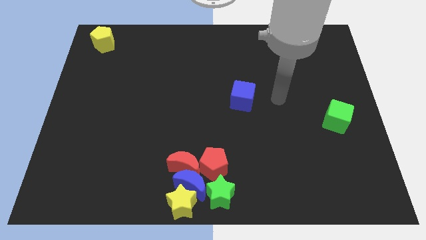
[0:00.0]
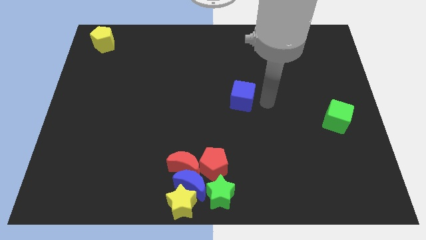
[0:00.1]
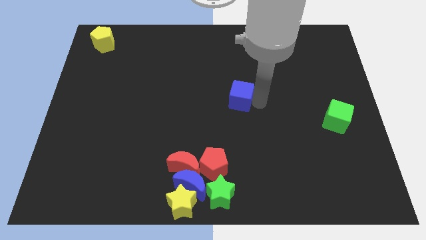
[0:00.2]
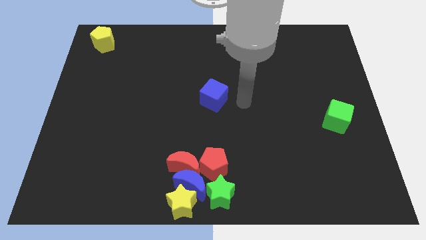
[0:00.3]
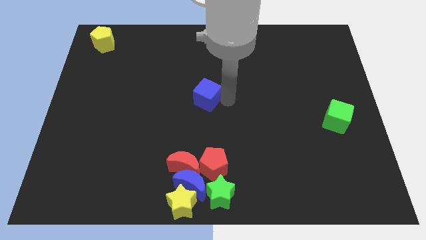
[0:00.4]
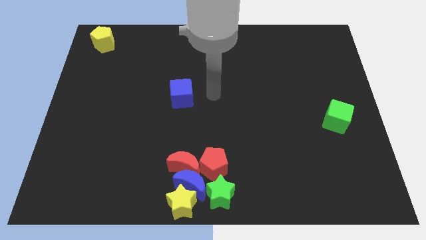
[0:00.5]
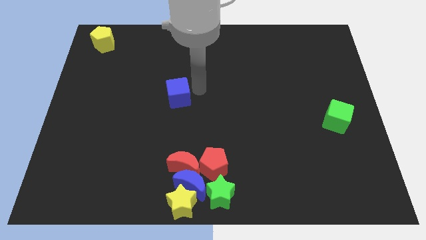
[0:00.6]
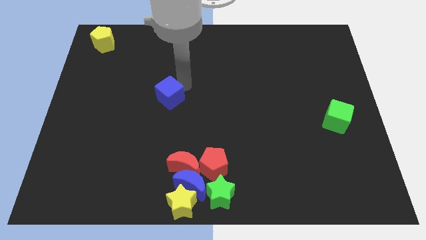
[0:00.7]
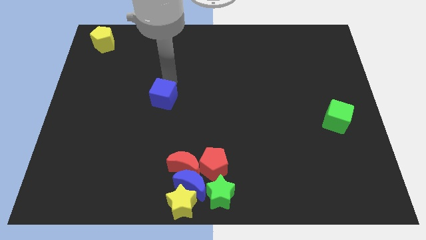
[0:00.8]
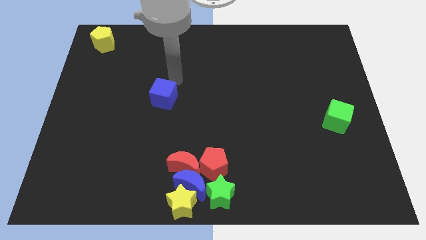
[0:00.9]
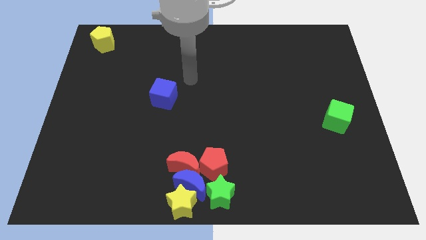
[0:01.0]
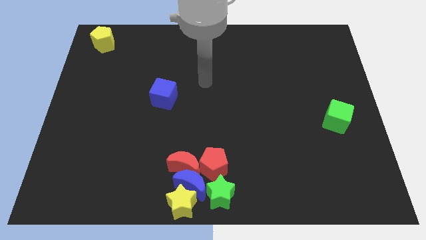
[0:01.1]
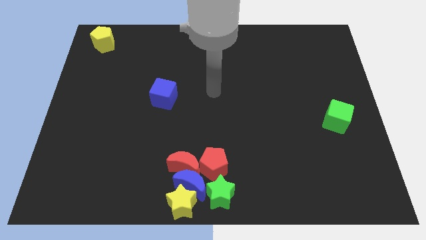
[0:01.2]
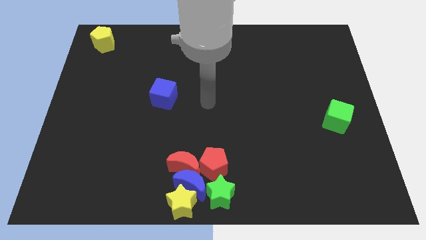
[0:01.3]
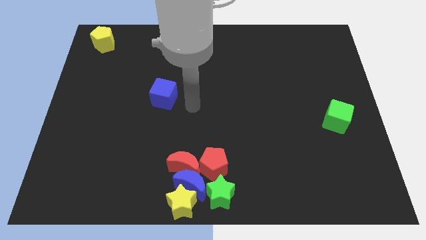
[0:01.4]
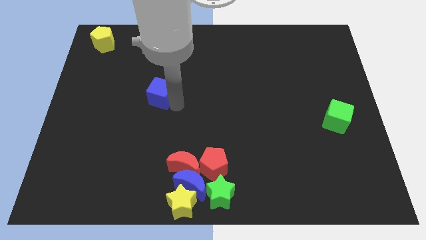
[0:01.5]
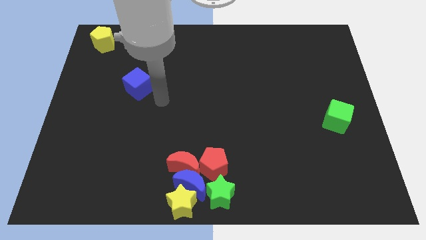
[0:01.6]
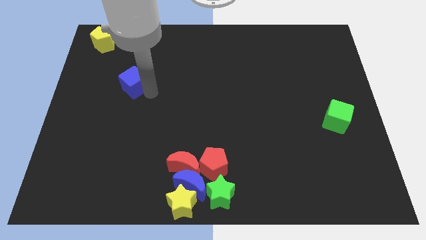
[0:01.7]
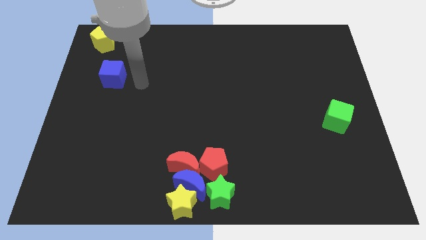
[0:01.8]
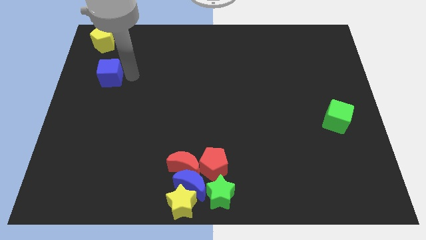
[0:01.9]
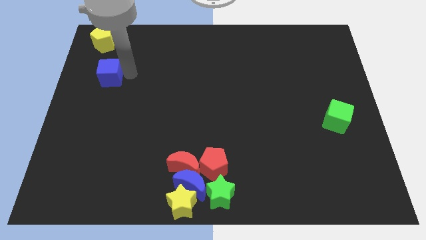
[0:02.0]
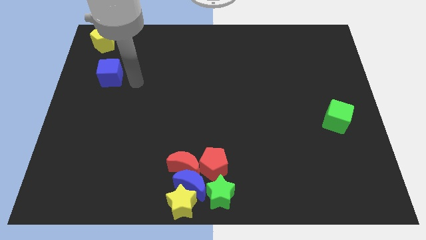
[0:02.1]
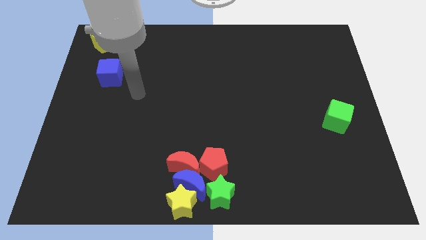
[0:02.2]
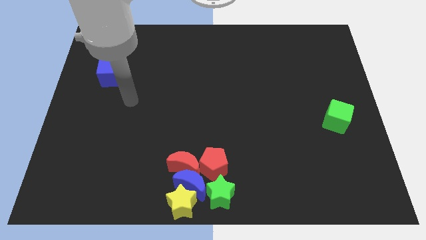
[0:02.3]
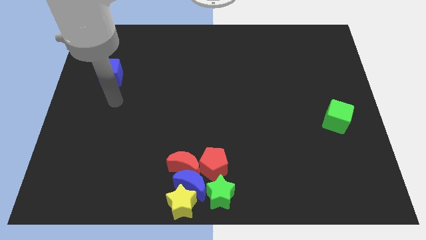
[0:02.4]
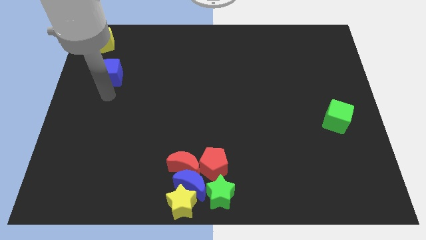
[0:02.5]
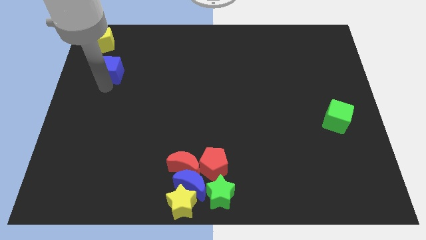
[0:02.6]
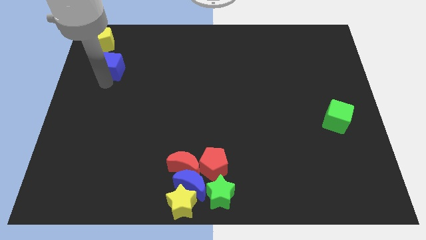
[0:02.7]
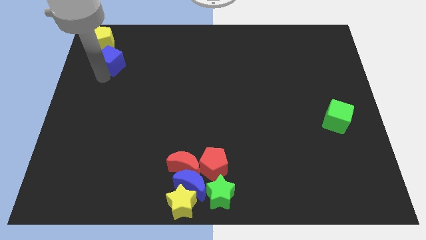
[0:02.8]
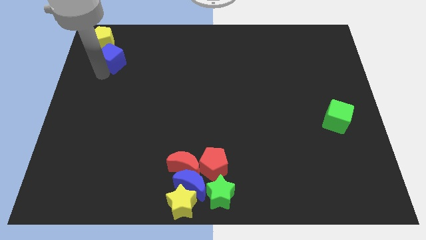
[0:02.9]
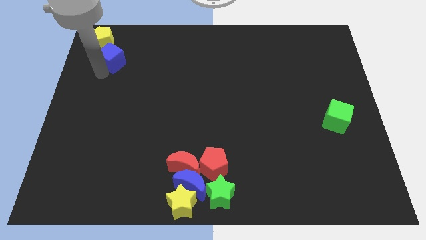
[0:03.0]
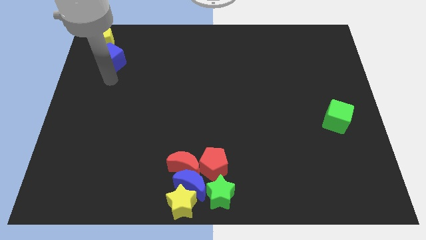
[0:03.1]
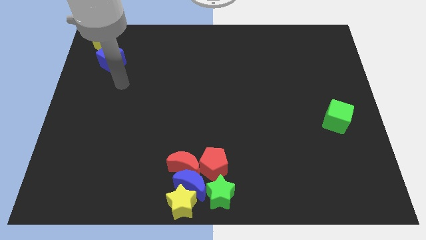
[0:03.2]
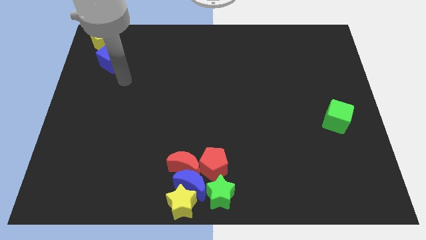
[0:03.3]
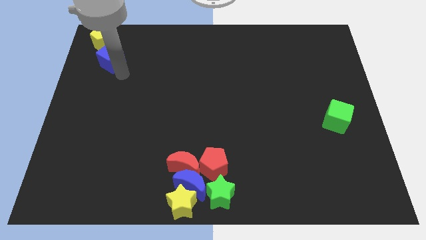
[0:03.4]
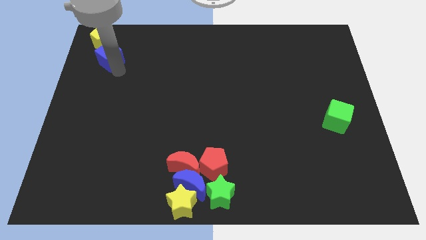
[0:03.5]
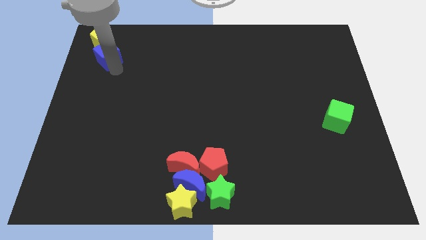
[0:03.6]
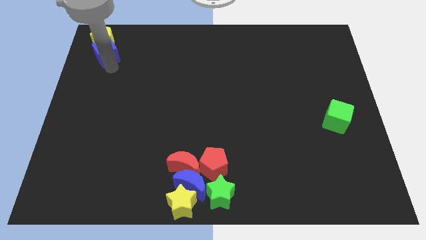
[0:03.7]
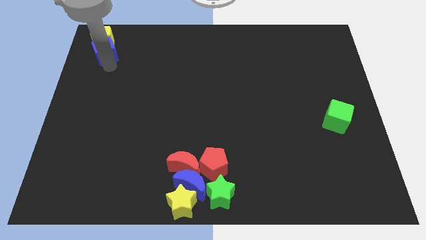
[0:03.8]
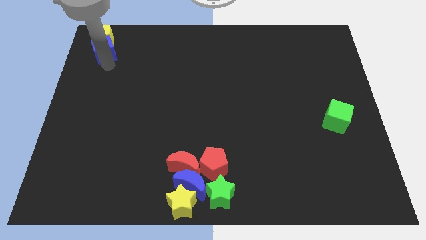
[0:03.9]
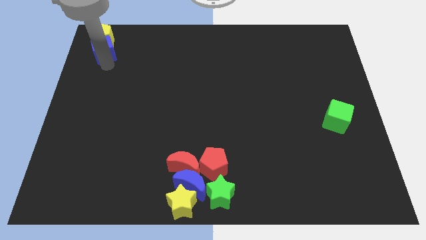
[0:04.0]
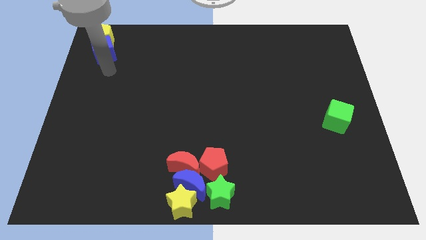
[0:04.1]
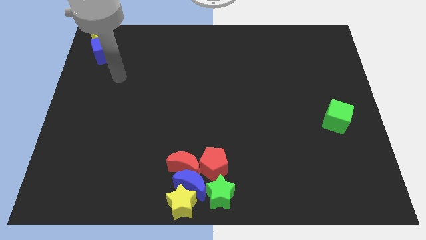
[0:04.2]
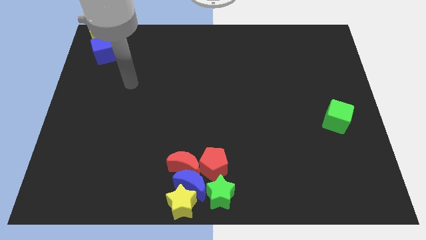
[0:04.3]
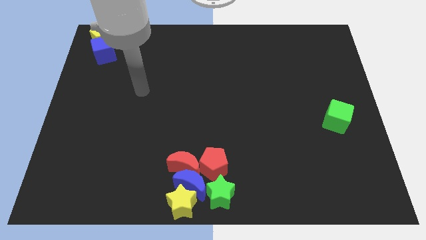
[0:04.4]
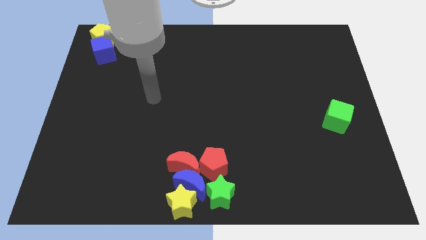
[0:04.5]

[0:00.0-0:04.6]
push the blue cube below to the yellow pentagon

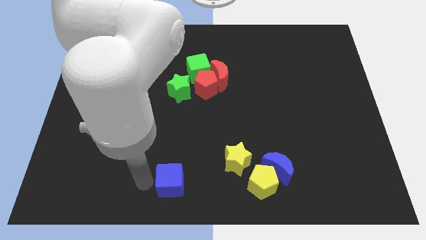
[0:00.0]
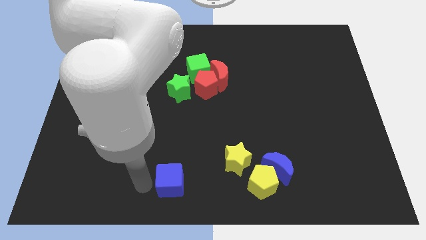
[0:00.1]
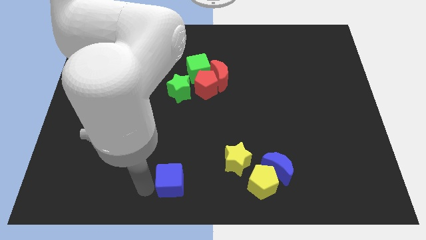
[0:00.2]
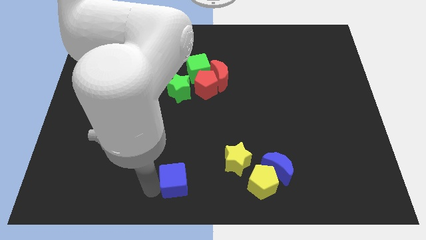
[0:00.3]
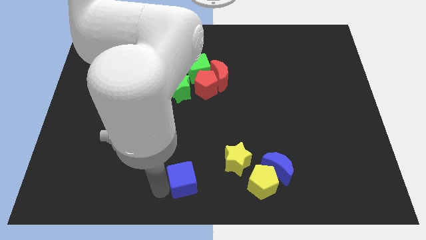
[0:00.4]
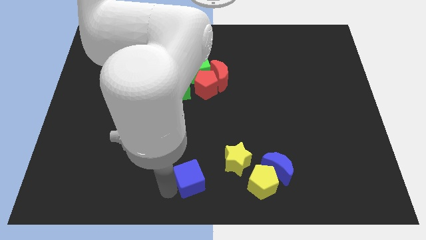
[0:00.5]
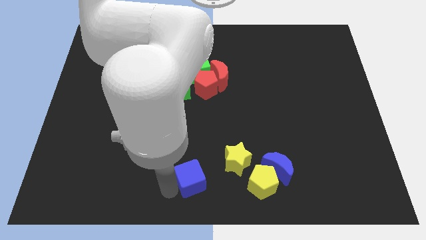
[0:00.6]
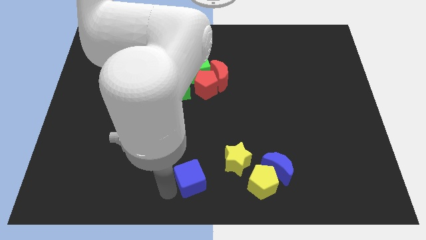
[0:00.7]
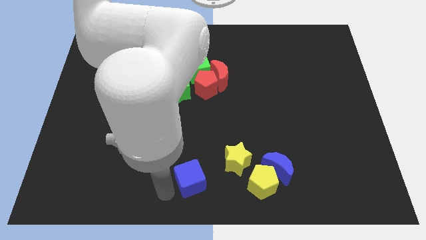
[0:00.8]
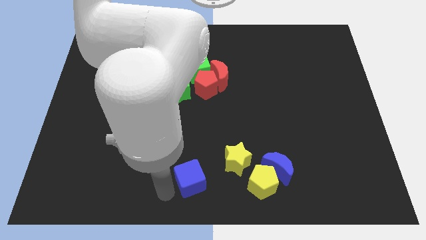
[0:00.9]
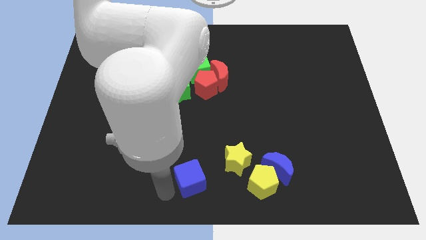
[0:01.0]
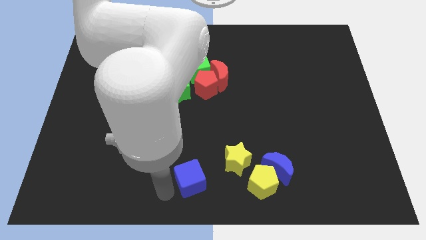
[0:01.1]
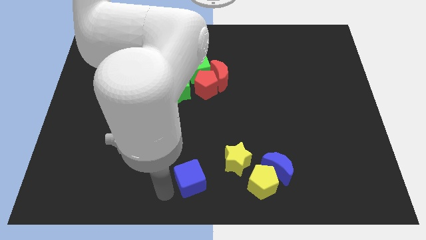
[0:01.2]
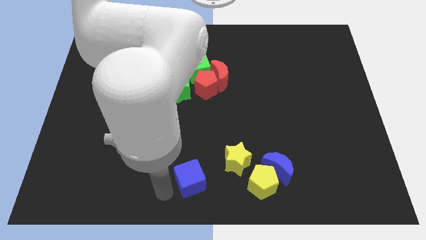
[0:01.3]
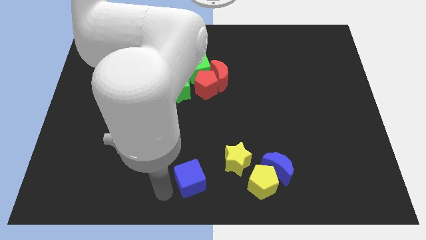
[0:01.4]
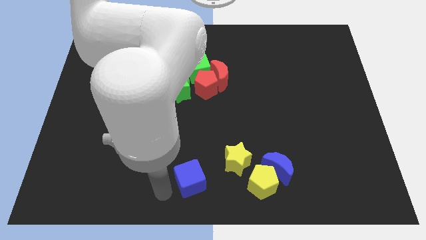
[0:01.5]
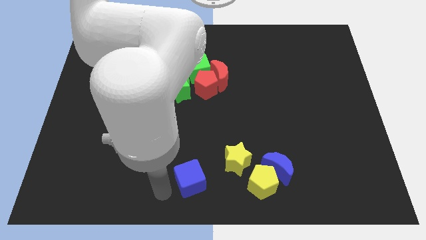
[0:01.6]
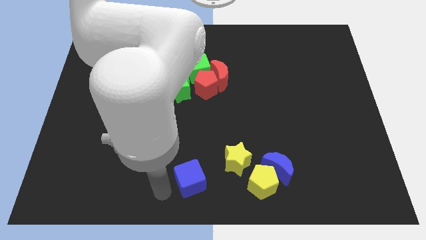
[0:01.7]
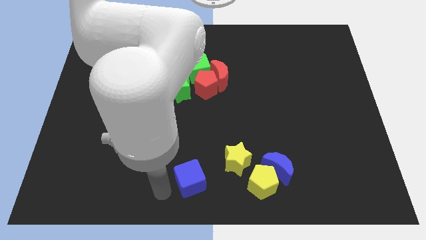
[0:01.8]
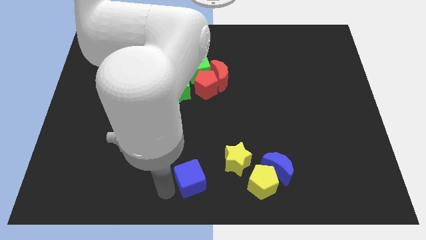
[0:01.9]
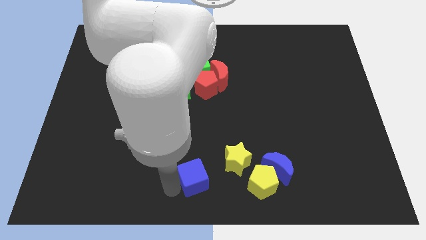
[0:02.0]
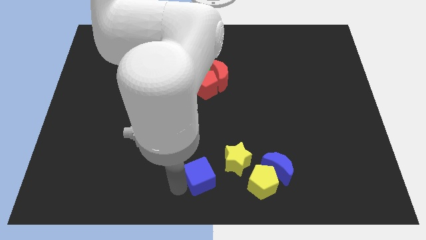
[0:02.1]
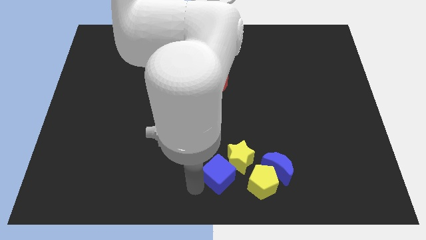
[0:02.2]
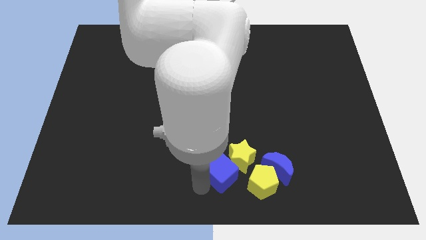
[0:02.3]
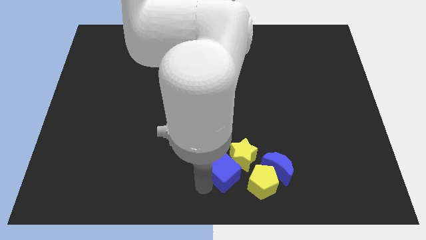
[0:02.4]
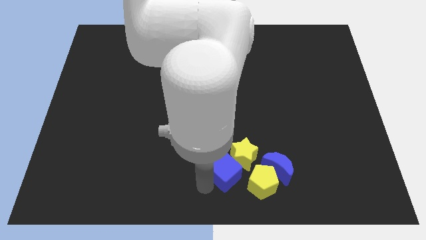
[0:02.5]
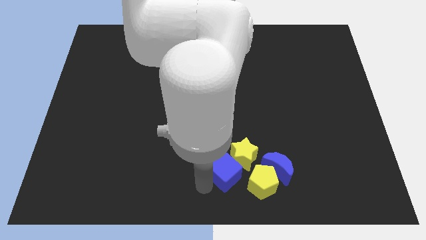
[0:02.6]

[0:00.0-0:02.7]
push the blue cube close to yellow star

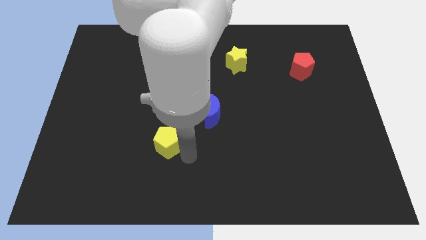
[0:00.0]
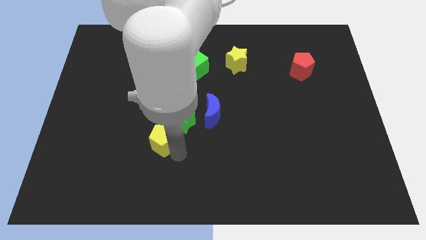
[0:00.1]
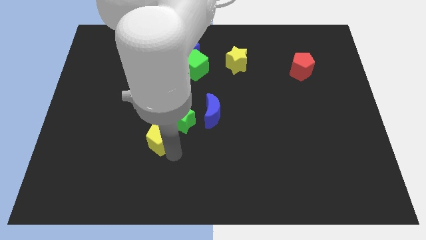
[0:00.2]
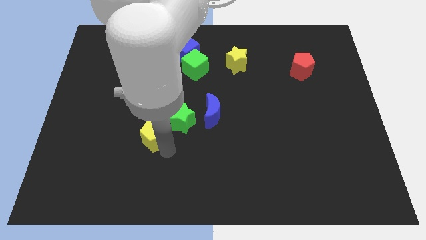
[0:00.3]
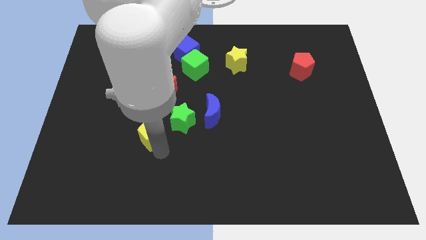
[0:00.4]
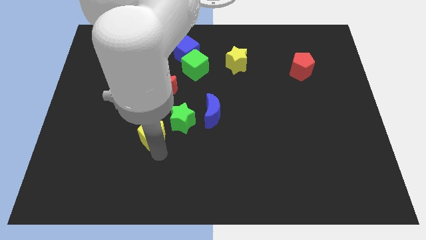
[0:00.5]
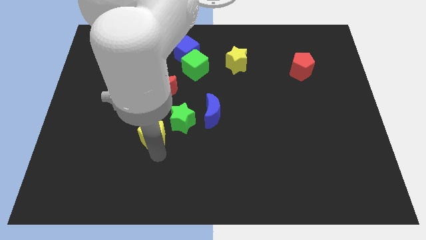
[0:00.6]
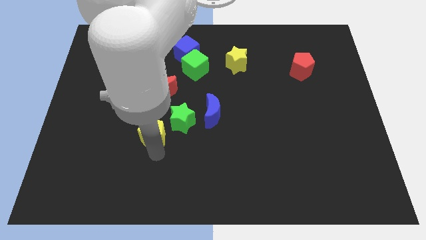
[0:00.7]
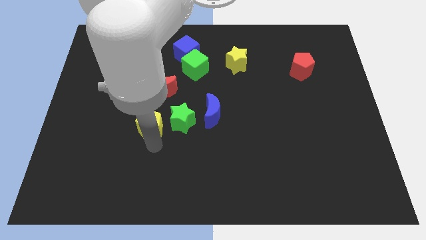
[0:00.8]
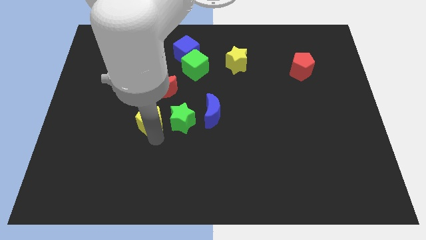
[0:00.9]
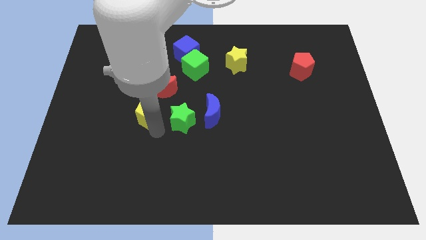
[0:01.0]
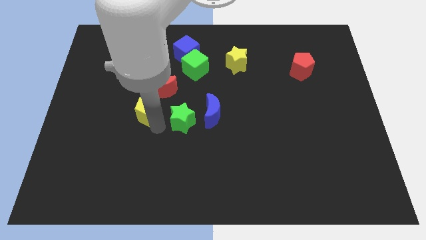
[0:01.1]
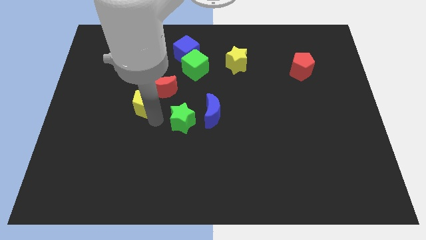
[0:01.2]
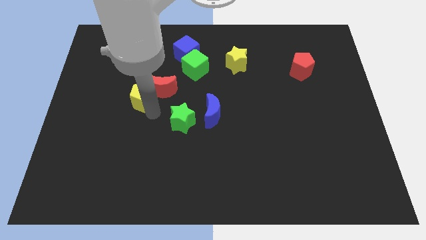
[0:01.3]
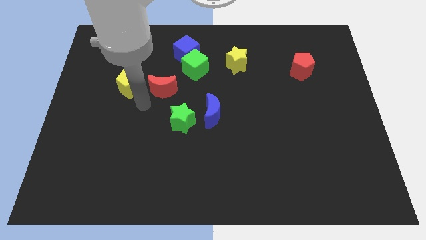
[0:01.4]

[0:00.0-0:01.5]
move the yellow pentagon left to the red crescent
